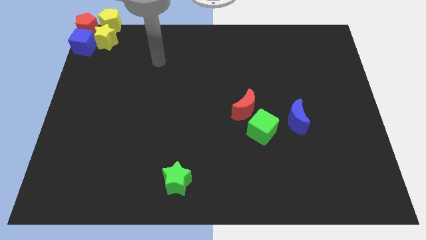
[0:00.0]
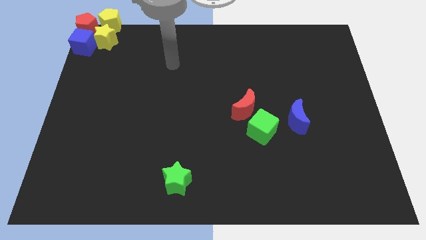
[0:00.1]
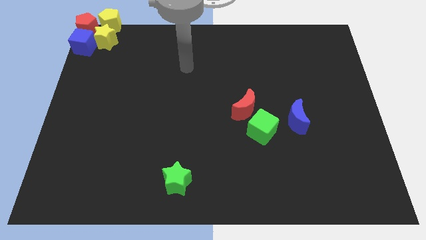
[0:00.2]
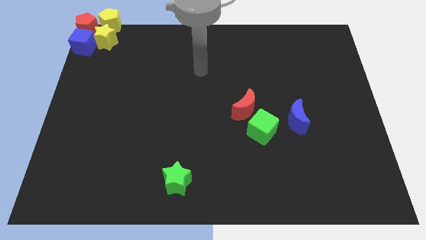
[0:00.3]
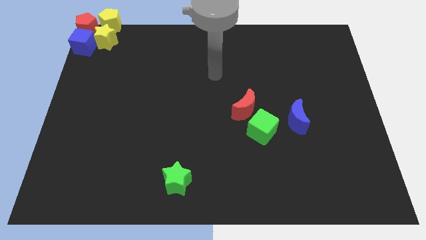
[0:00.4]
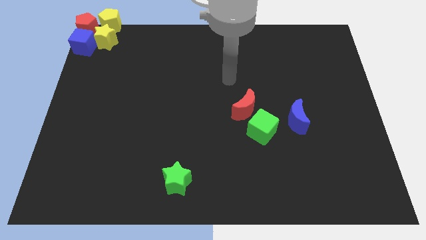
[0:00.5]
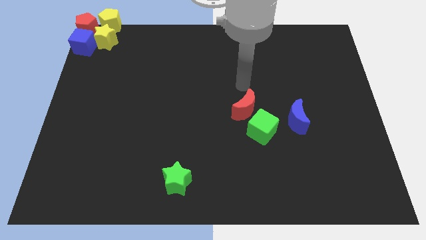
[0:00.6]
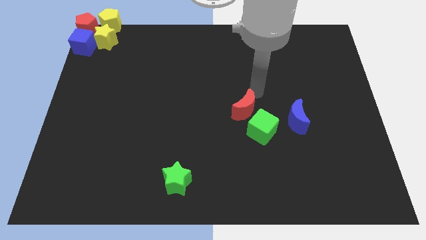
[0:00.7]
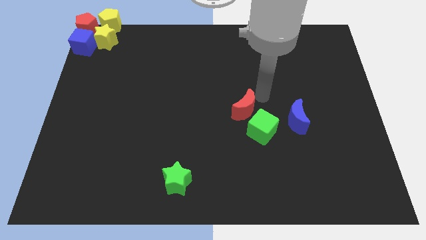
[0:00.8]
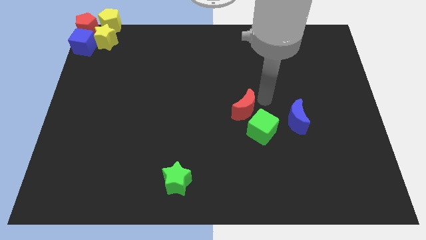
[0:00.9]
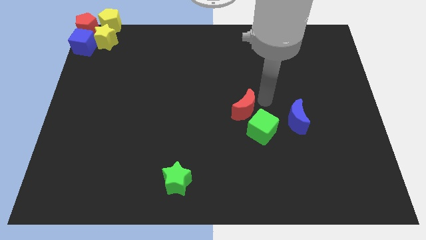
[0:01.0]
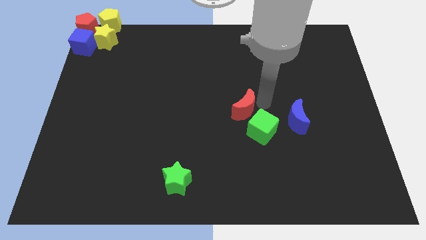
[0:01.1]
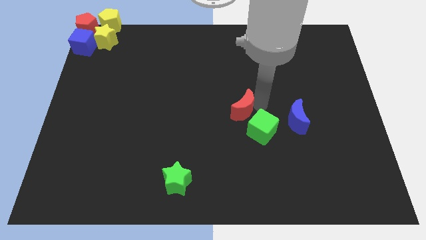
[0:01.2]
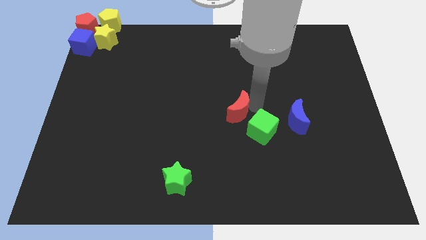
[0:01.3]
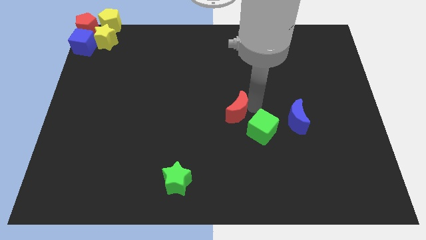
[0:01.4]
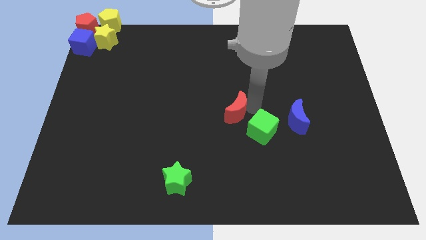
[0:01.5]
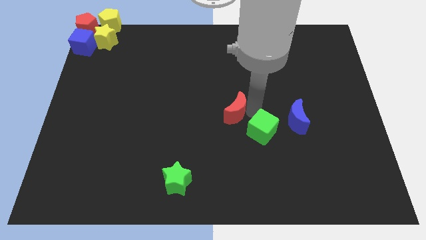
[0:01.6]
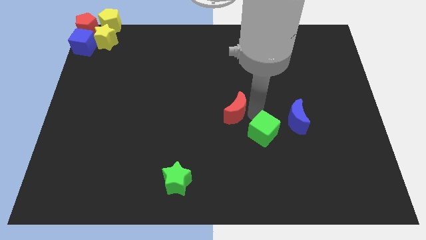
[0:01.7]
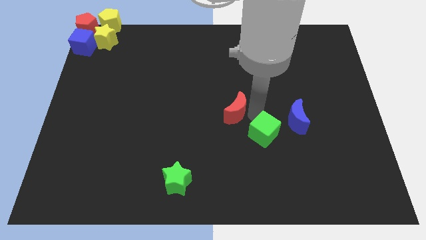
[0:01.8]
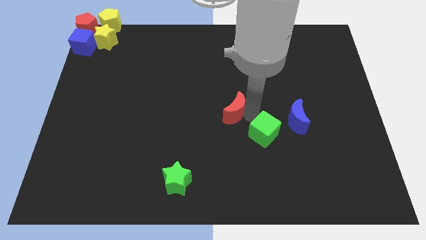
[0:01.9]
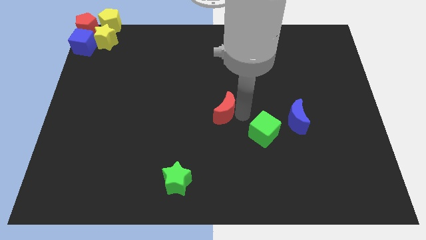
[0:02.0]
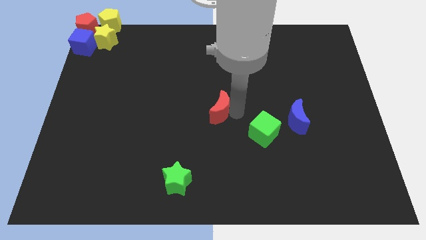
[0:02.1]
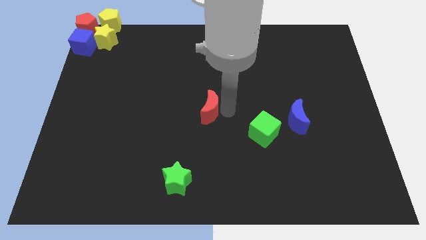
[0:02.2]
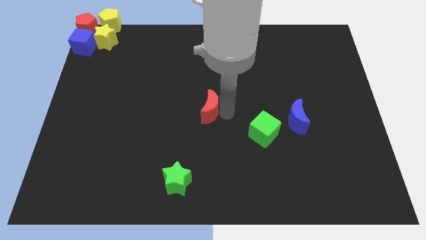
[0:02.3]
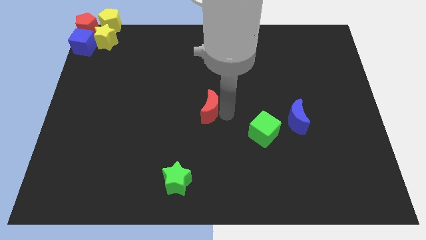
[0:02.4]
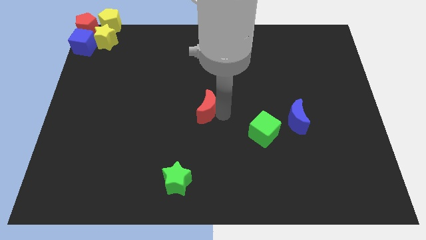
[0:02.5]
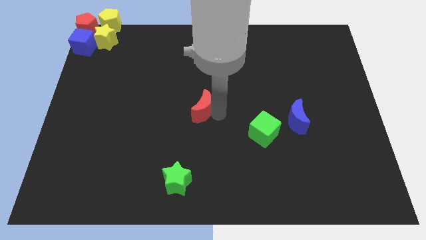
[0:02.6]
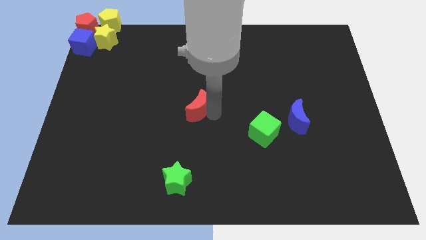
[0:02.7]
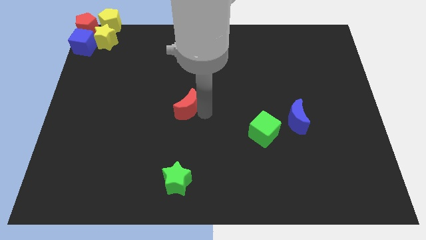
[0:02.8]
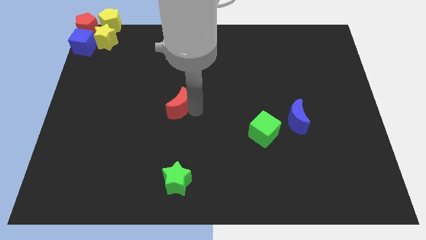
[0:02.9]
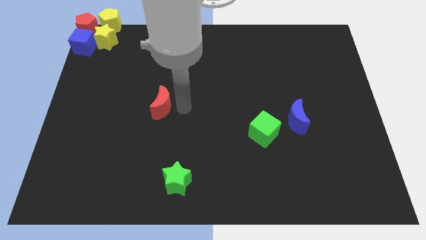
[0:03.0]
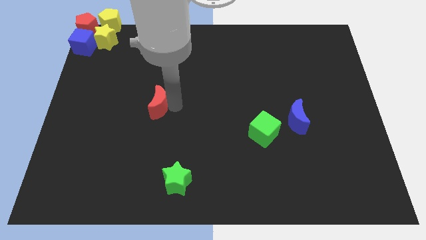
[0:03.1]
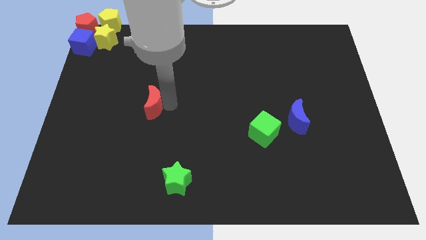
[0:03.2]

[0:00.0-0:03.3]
drag the red moon away from the green cube

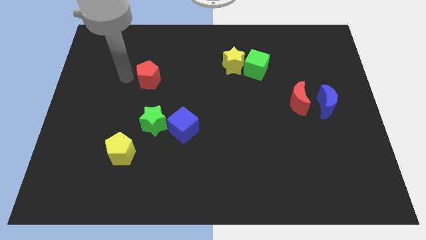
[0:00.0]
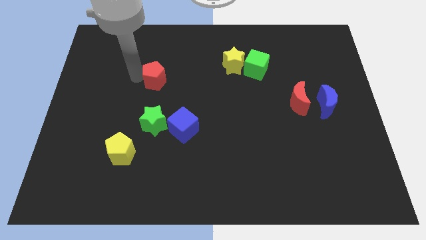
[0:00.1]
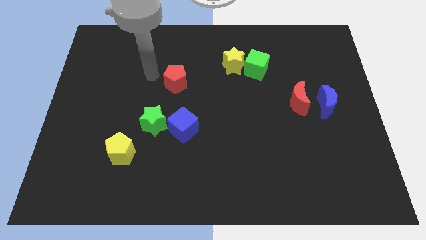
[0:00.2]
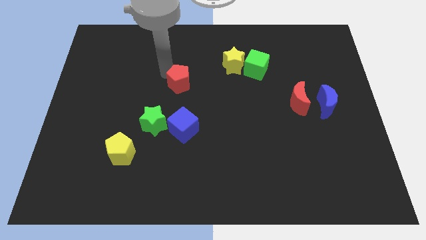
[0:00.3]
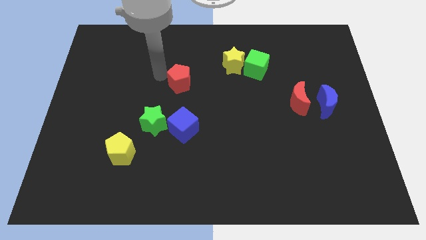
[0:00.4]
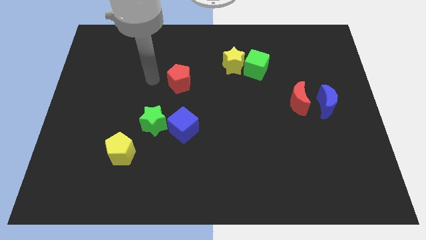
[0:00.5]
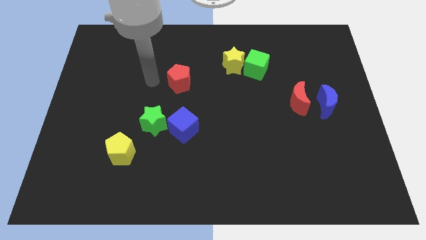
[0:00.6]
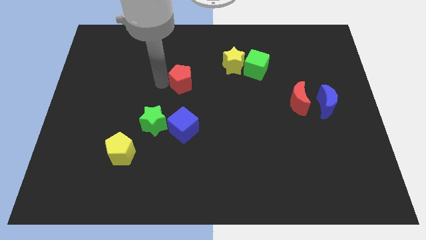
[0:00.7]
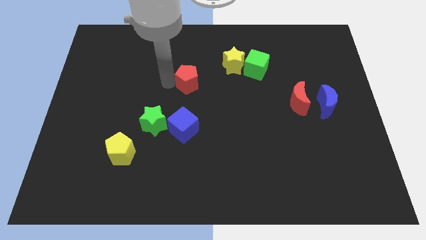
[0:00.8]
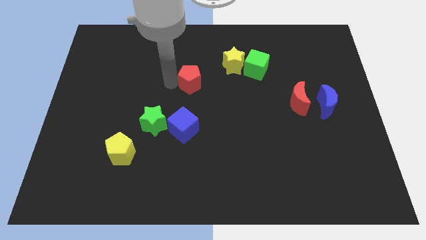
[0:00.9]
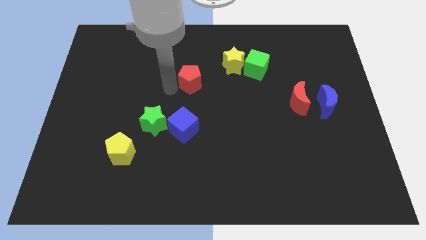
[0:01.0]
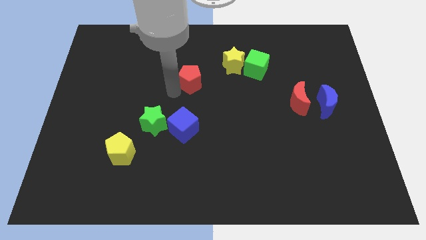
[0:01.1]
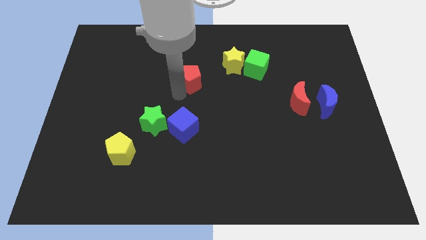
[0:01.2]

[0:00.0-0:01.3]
move red pentagon to the right of the board

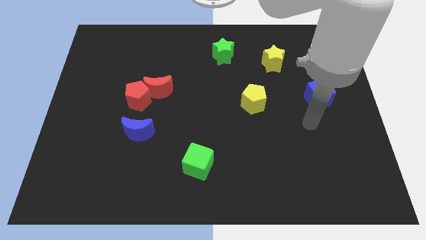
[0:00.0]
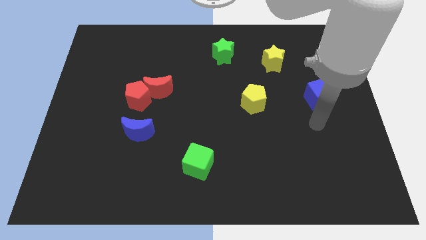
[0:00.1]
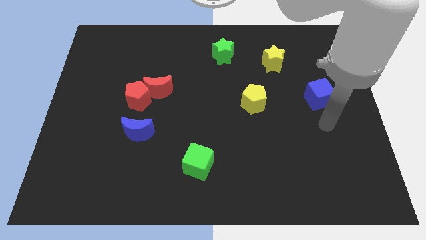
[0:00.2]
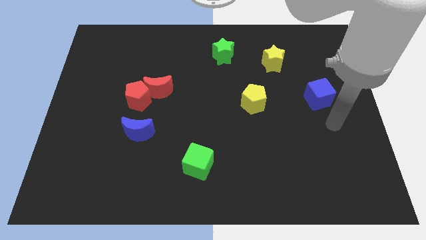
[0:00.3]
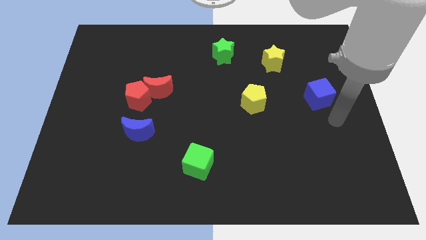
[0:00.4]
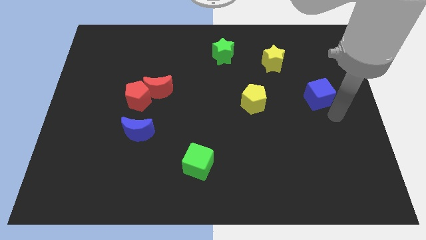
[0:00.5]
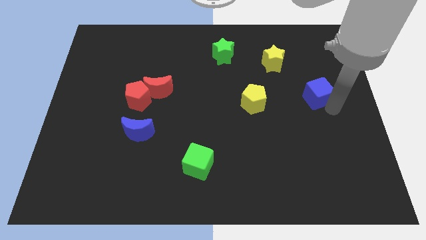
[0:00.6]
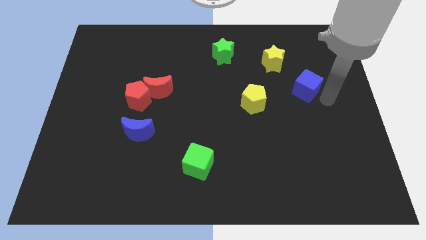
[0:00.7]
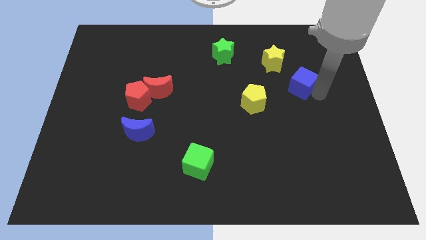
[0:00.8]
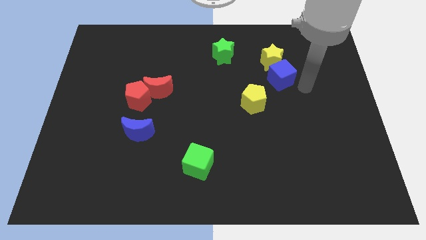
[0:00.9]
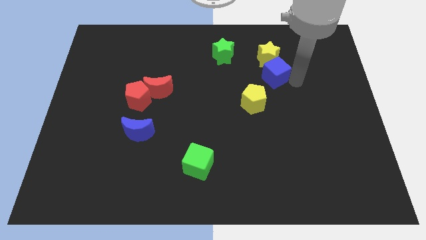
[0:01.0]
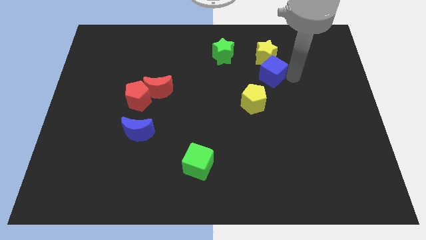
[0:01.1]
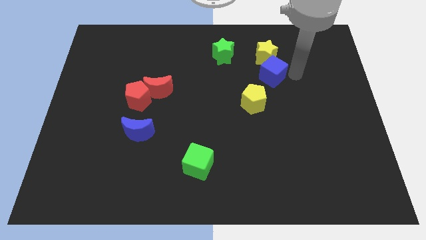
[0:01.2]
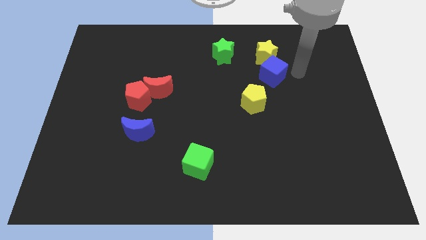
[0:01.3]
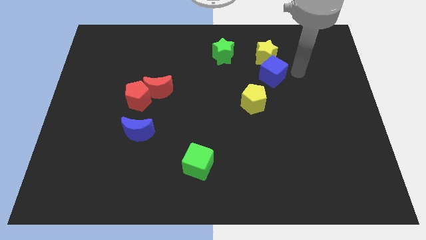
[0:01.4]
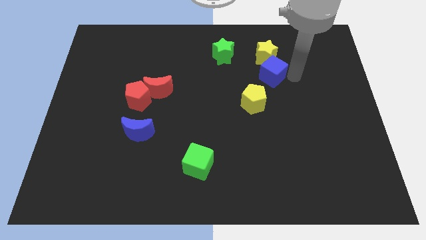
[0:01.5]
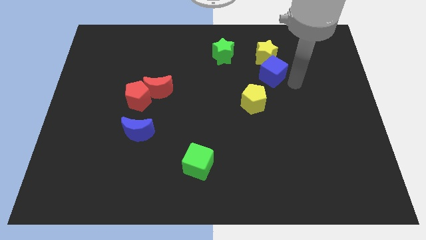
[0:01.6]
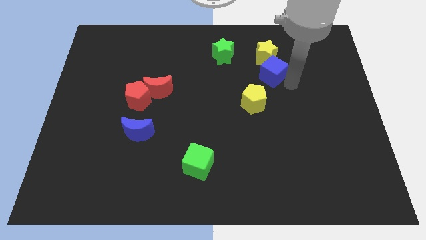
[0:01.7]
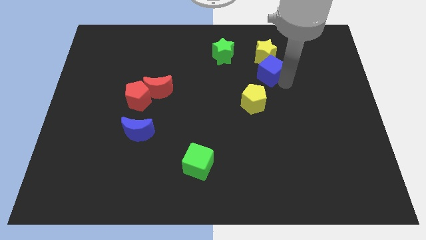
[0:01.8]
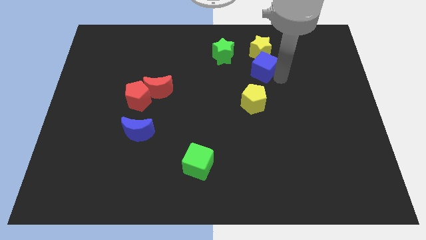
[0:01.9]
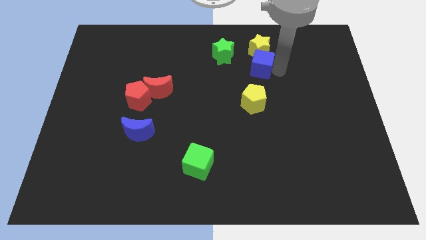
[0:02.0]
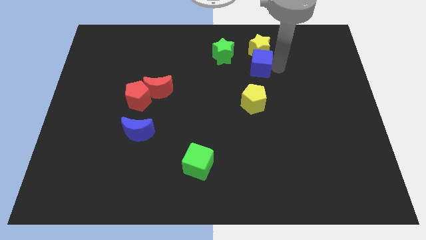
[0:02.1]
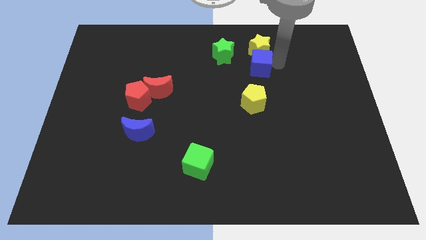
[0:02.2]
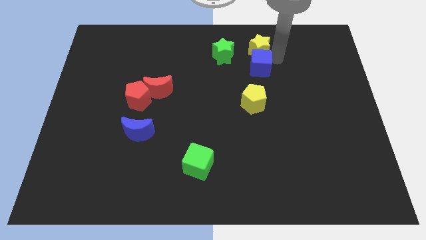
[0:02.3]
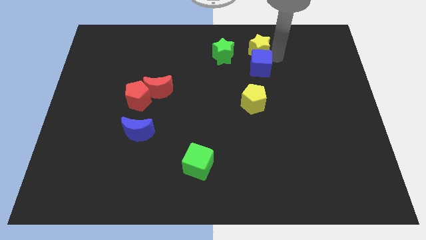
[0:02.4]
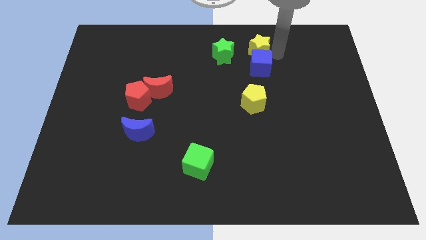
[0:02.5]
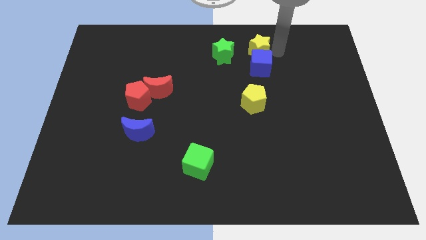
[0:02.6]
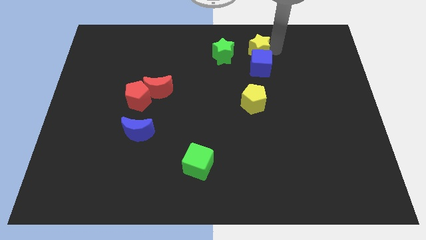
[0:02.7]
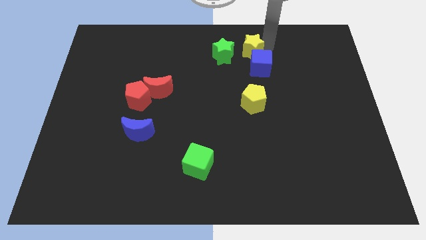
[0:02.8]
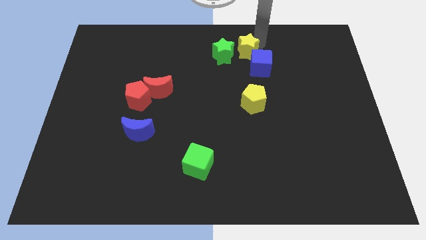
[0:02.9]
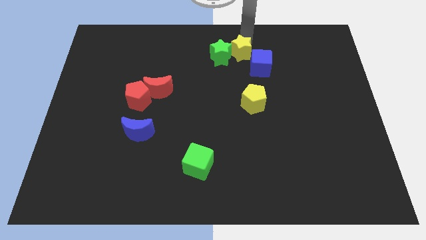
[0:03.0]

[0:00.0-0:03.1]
push the blue cube down to the yellow star

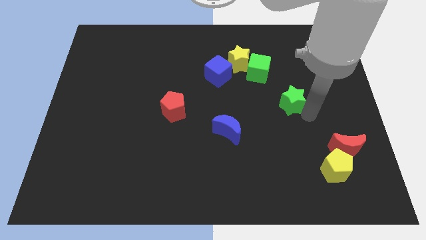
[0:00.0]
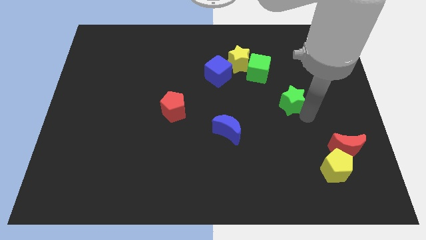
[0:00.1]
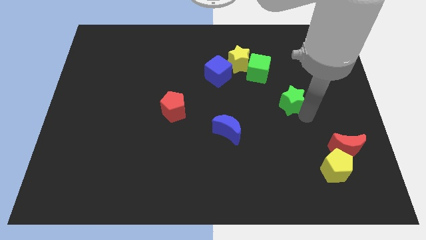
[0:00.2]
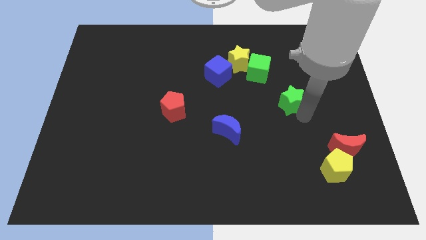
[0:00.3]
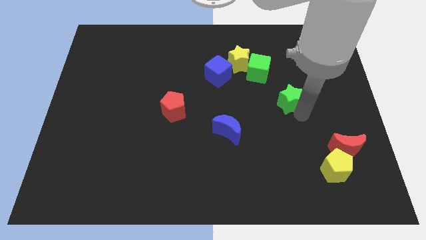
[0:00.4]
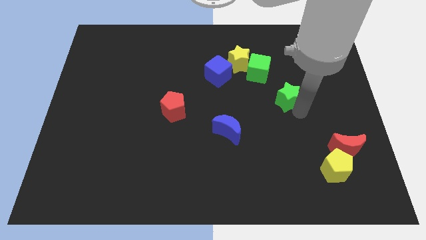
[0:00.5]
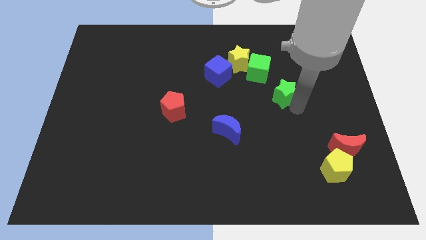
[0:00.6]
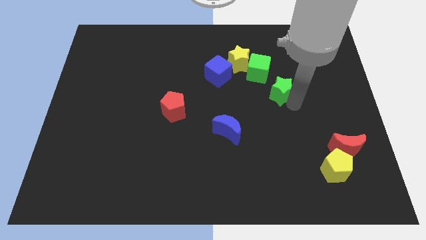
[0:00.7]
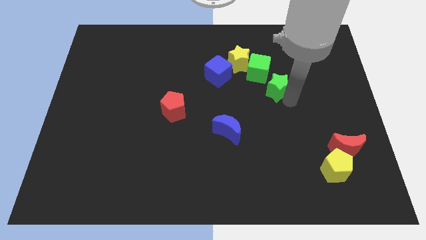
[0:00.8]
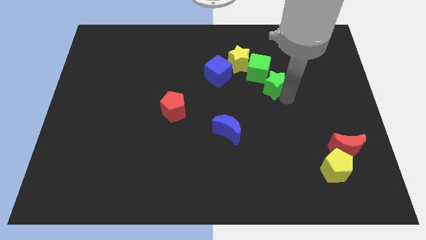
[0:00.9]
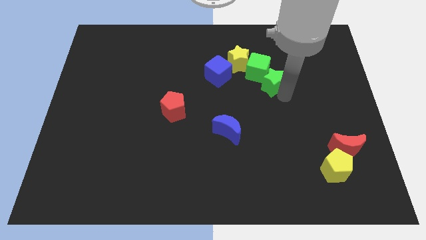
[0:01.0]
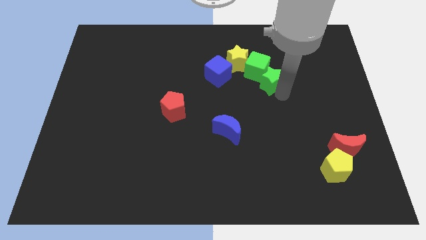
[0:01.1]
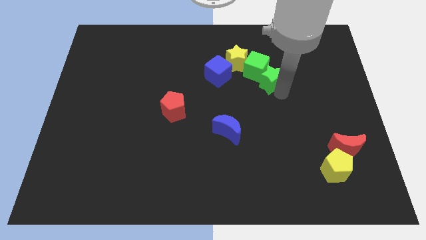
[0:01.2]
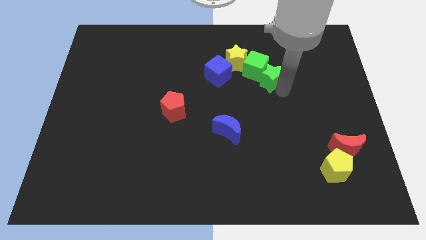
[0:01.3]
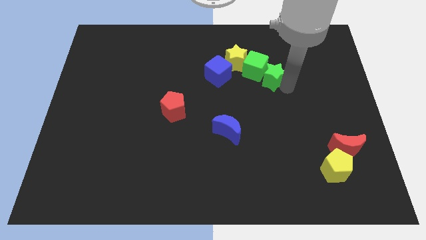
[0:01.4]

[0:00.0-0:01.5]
move the green star into the bottom right side of the green cube
